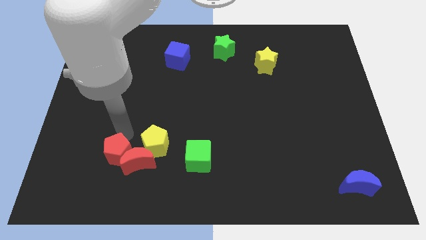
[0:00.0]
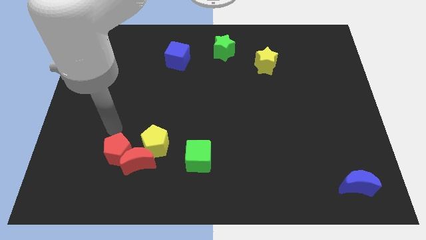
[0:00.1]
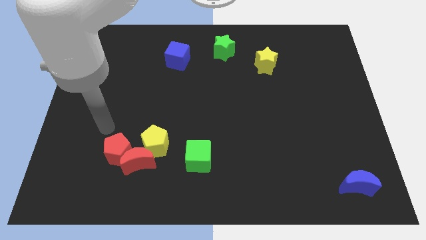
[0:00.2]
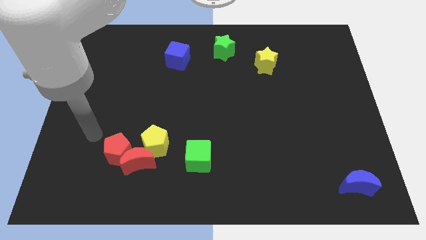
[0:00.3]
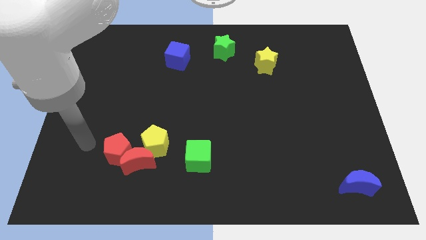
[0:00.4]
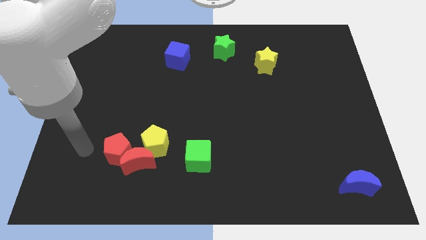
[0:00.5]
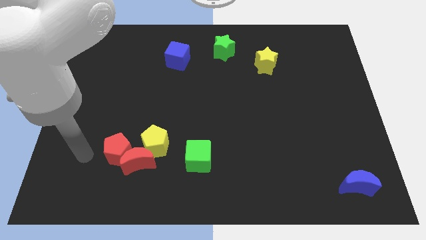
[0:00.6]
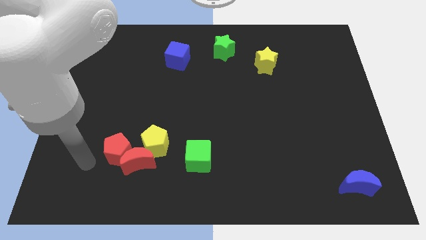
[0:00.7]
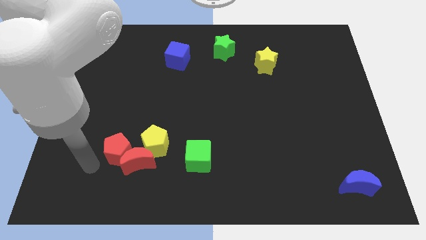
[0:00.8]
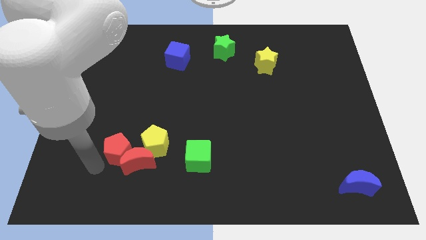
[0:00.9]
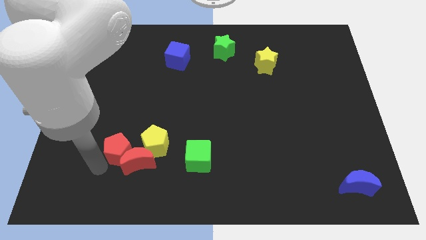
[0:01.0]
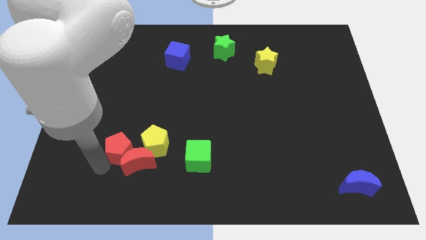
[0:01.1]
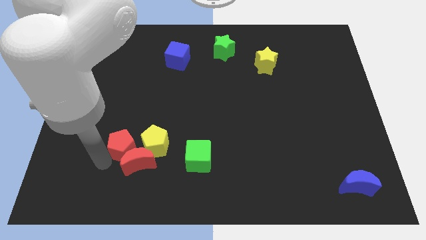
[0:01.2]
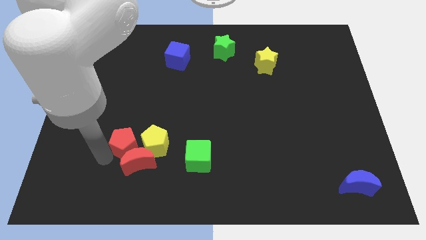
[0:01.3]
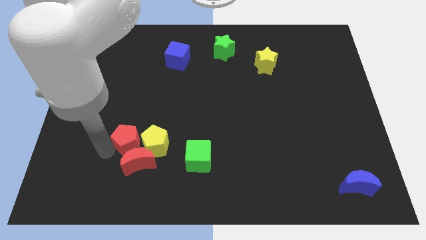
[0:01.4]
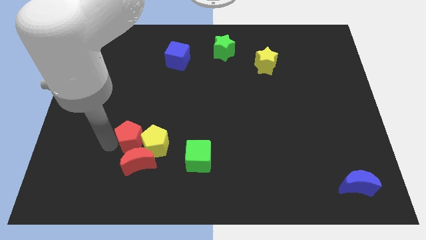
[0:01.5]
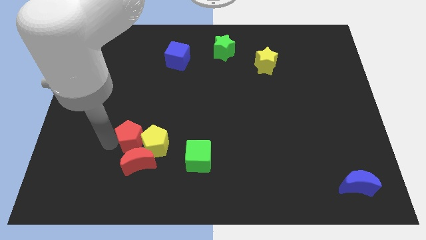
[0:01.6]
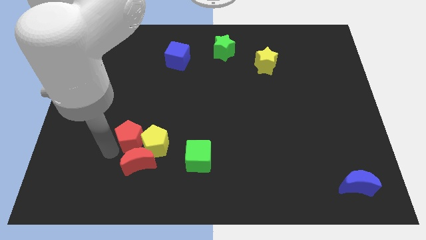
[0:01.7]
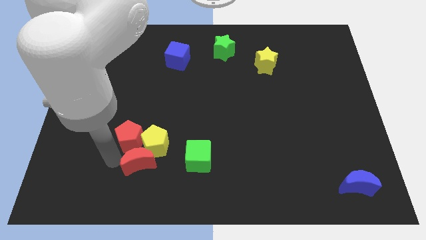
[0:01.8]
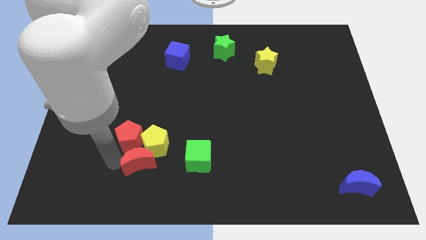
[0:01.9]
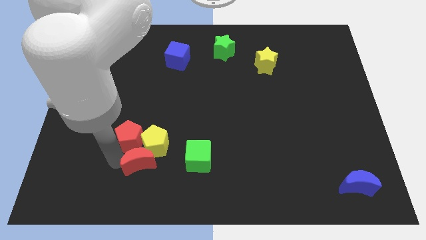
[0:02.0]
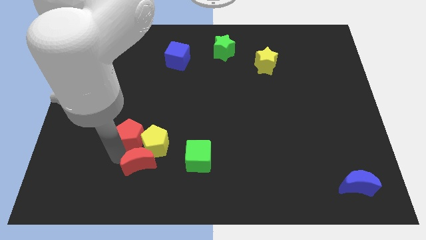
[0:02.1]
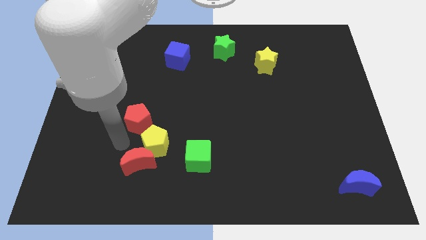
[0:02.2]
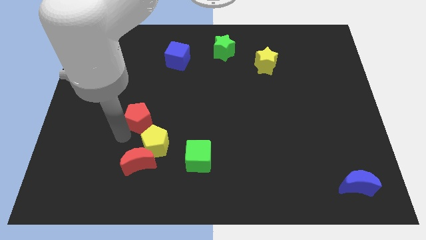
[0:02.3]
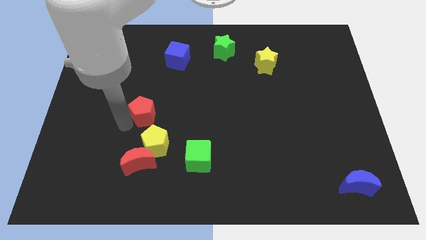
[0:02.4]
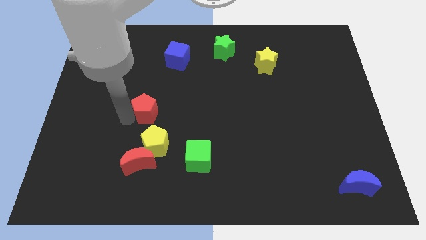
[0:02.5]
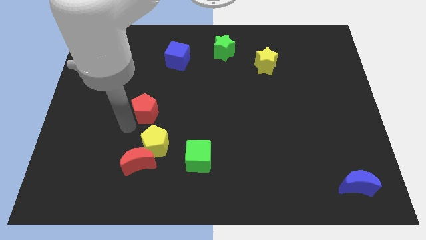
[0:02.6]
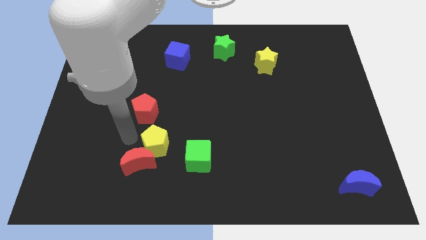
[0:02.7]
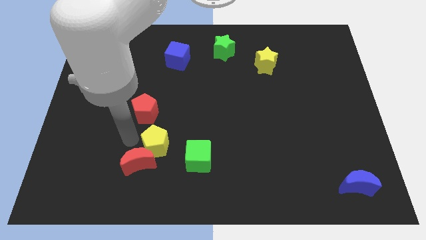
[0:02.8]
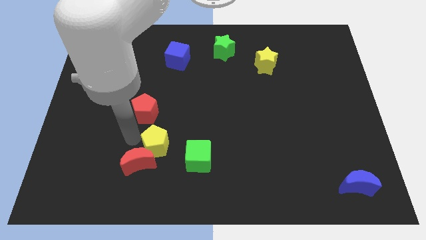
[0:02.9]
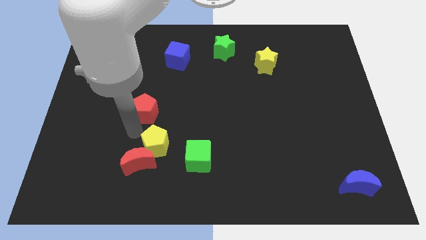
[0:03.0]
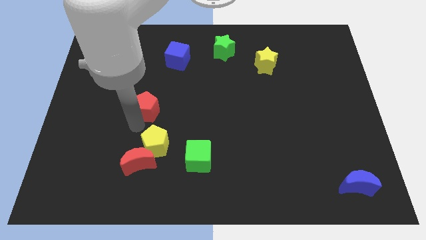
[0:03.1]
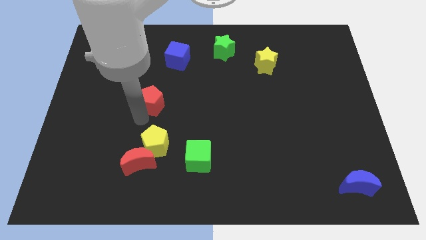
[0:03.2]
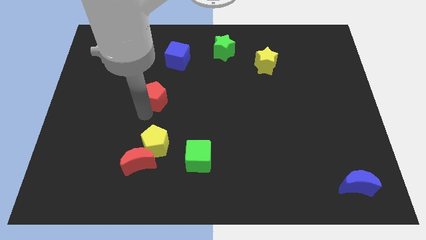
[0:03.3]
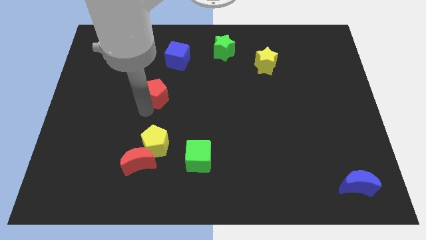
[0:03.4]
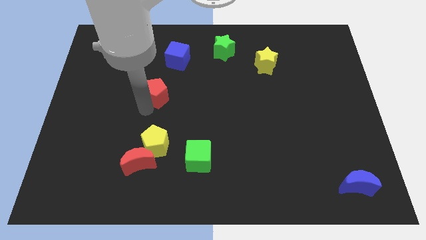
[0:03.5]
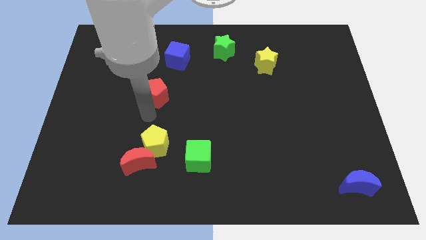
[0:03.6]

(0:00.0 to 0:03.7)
place the red pentagon above the yellow pentagon

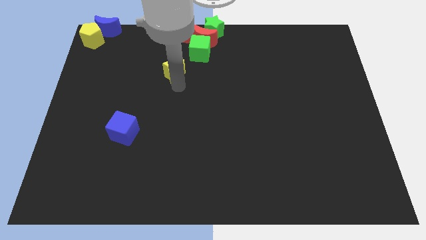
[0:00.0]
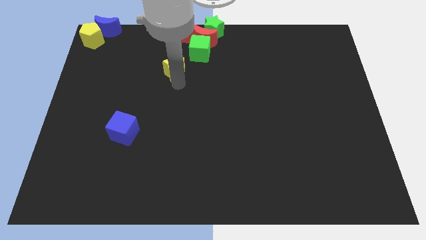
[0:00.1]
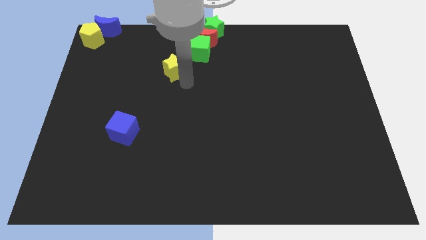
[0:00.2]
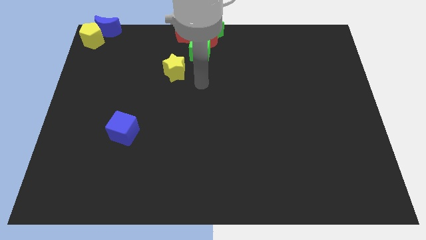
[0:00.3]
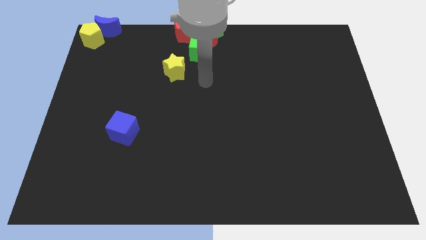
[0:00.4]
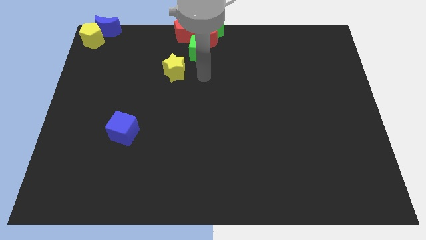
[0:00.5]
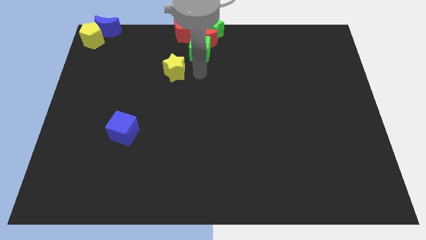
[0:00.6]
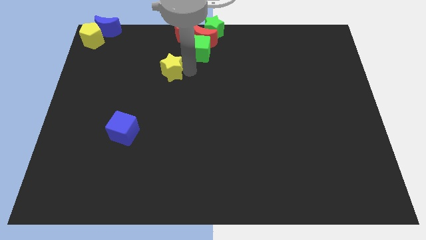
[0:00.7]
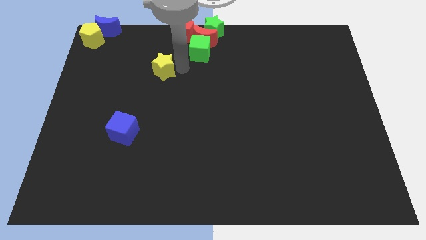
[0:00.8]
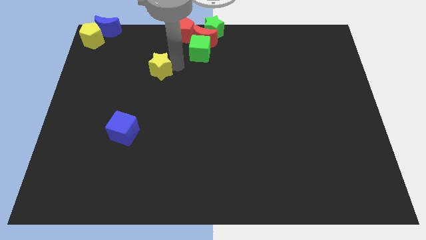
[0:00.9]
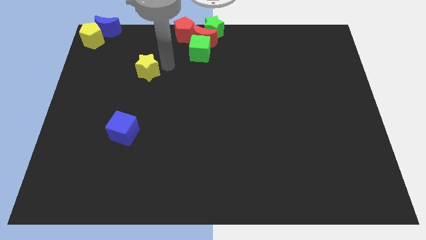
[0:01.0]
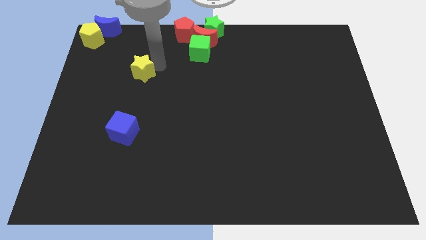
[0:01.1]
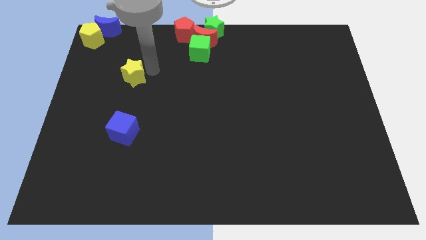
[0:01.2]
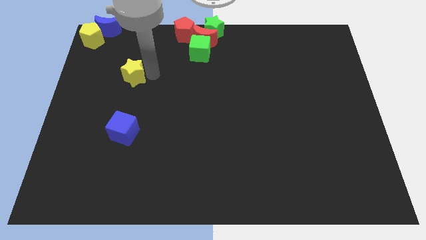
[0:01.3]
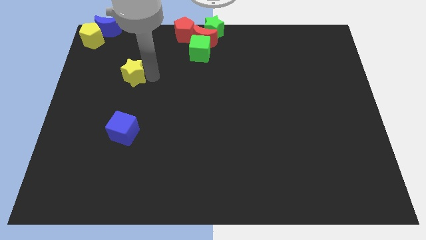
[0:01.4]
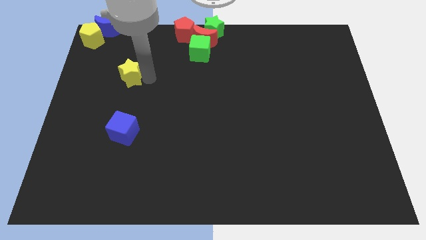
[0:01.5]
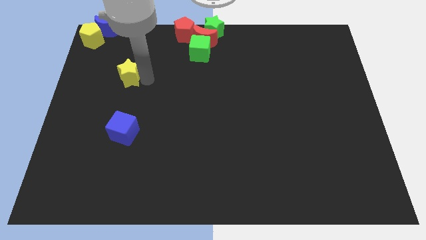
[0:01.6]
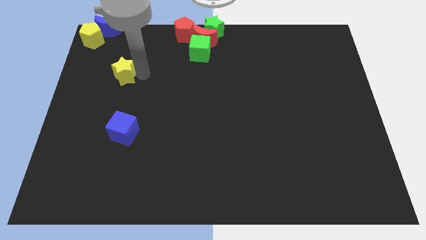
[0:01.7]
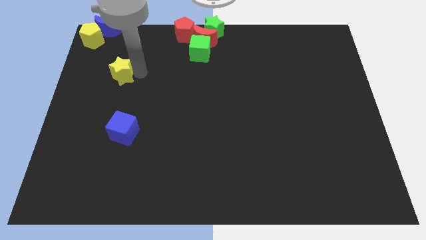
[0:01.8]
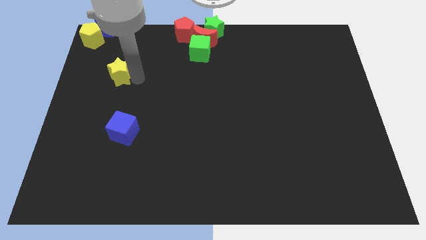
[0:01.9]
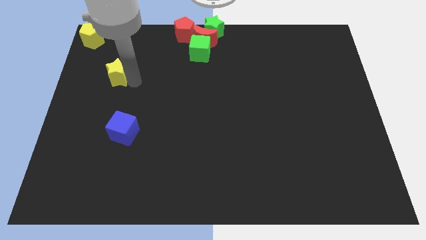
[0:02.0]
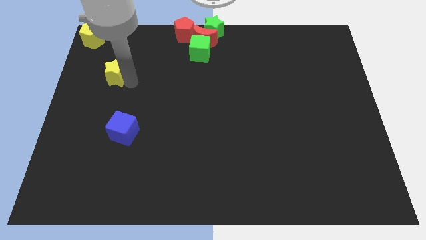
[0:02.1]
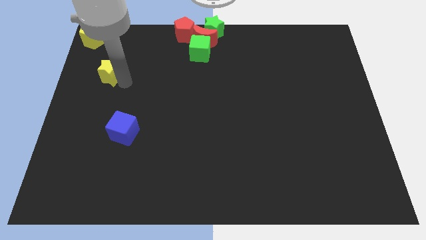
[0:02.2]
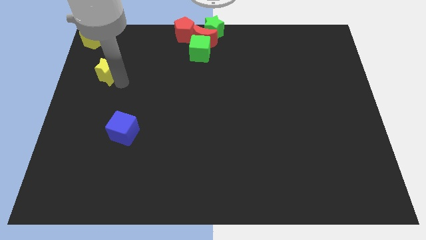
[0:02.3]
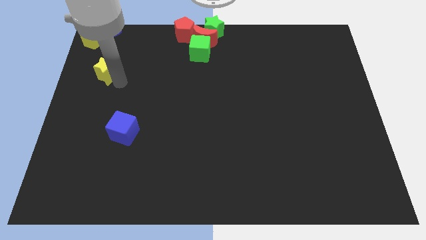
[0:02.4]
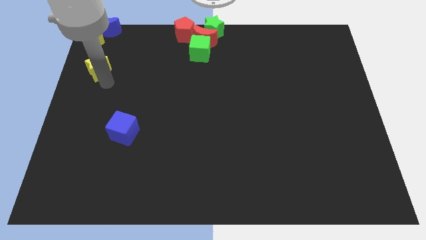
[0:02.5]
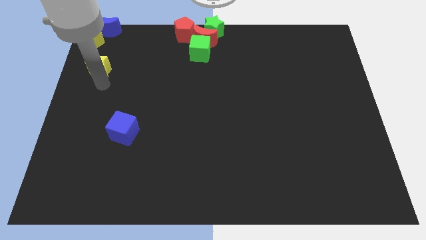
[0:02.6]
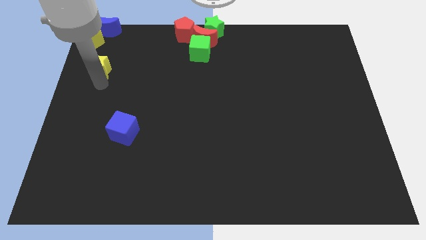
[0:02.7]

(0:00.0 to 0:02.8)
move the yellow star towards the yellow pentagon

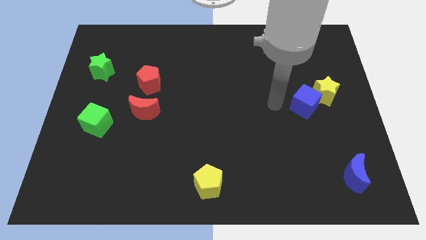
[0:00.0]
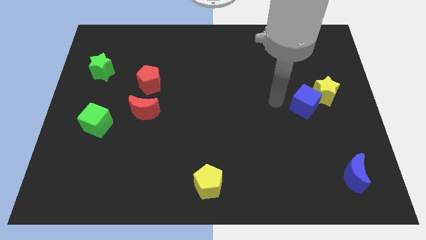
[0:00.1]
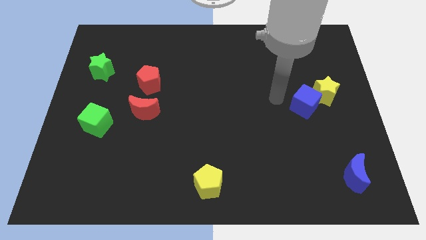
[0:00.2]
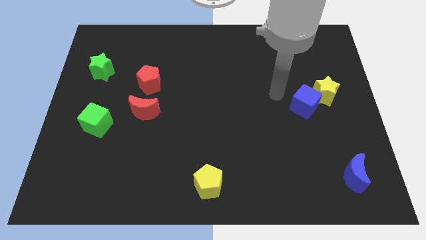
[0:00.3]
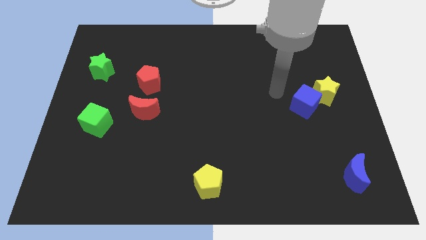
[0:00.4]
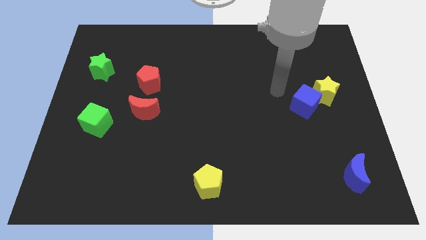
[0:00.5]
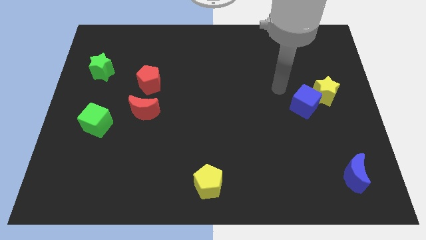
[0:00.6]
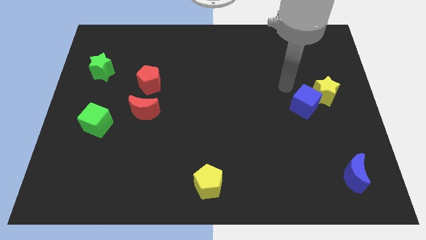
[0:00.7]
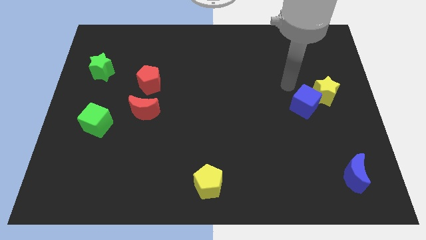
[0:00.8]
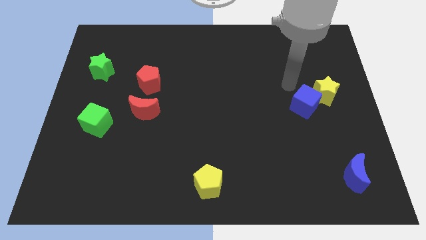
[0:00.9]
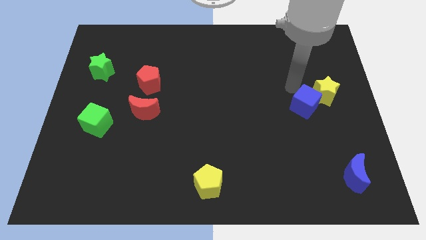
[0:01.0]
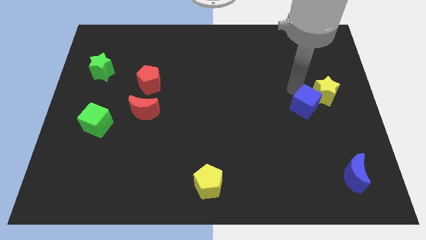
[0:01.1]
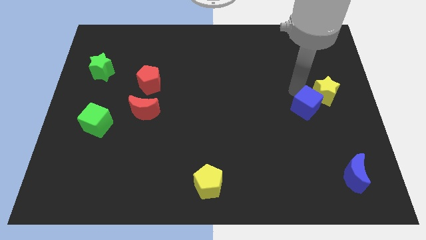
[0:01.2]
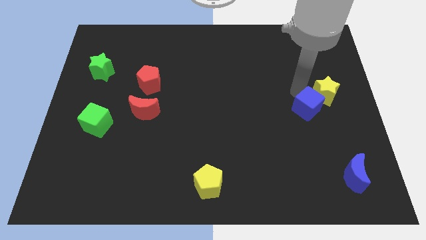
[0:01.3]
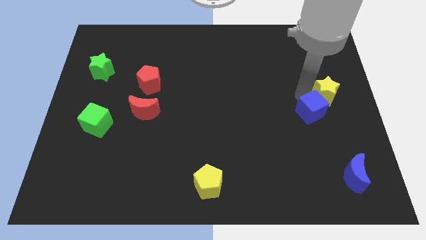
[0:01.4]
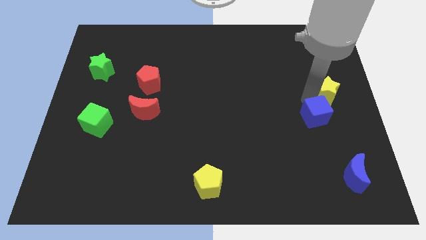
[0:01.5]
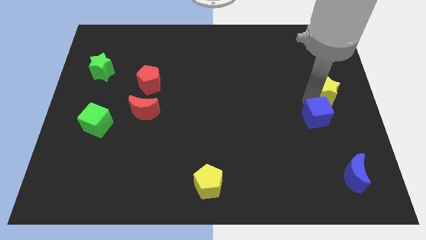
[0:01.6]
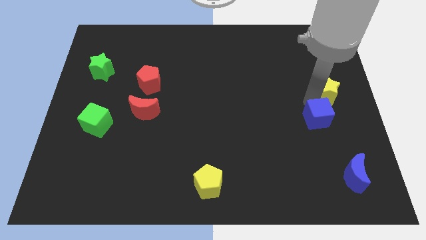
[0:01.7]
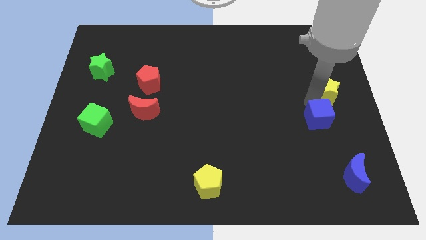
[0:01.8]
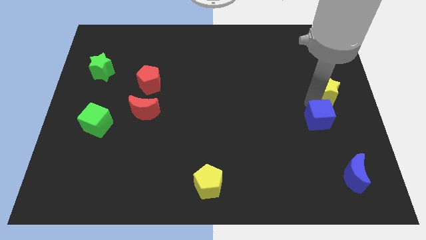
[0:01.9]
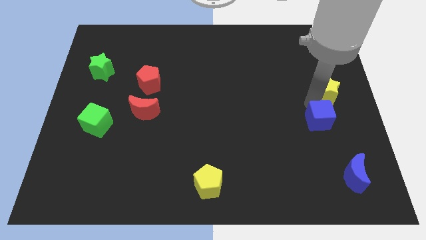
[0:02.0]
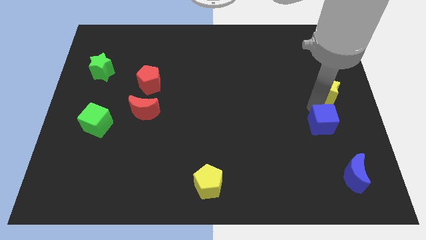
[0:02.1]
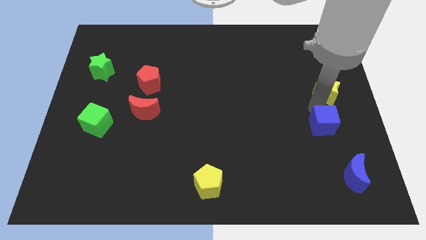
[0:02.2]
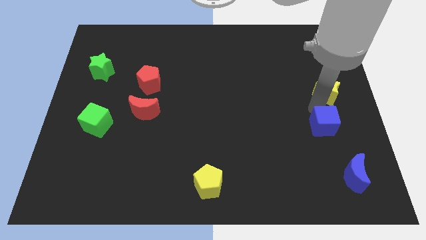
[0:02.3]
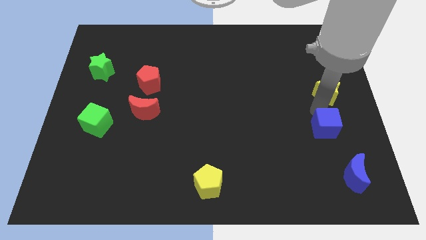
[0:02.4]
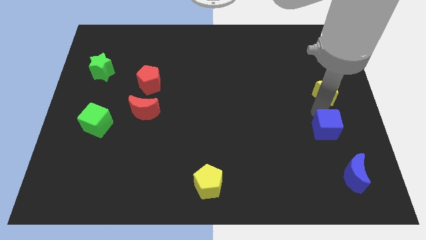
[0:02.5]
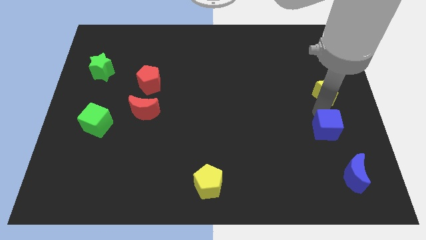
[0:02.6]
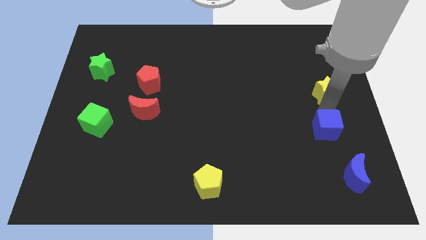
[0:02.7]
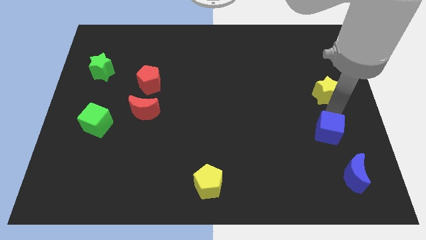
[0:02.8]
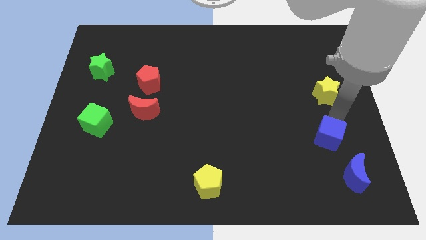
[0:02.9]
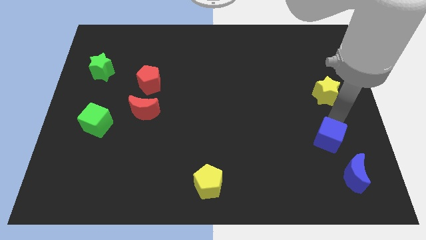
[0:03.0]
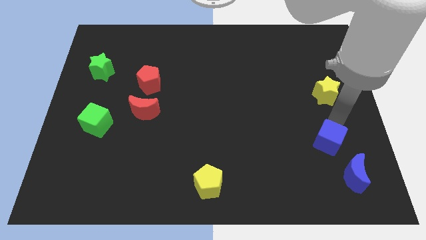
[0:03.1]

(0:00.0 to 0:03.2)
separate blue cube from yellow star
